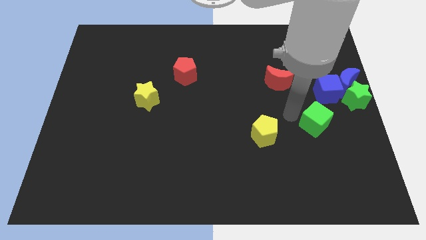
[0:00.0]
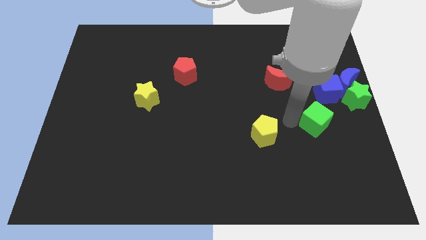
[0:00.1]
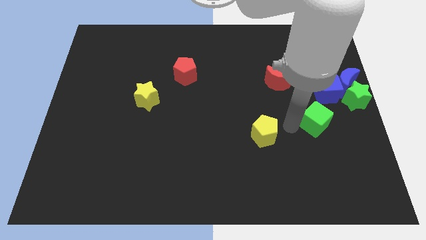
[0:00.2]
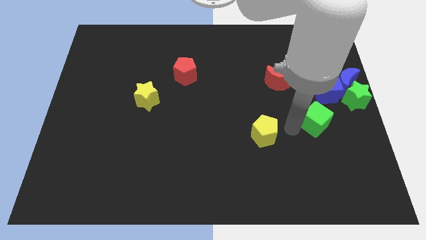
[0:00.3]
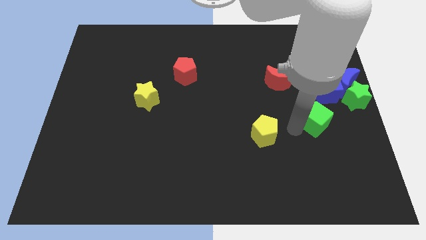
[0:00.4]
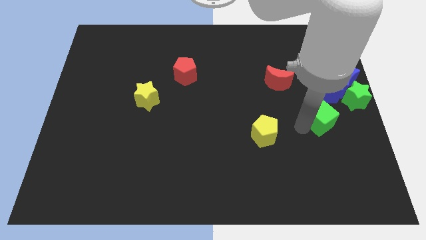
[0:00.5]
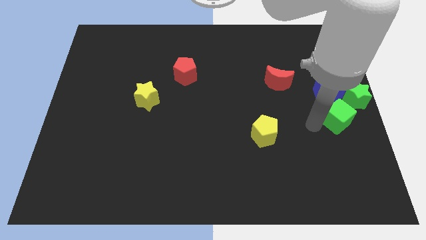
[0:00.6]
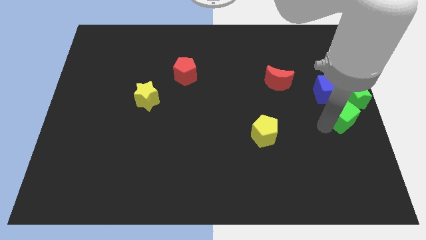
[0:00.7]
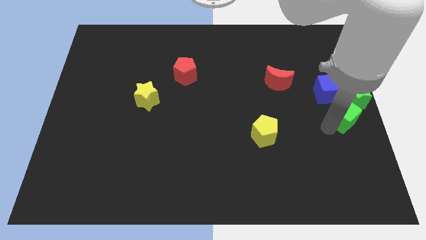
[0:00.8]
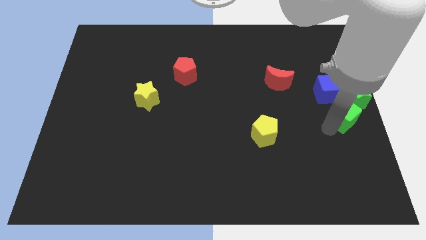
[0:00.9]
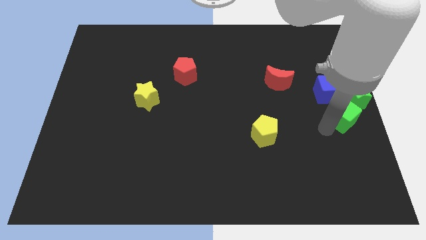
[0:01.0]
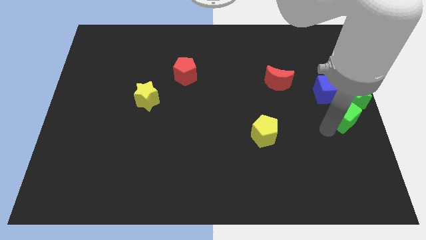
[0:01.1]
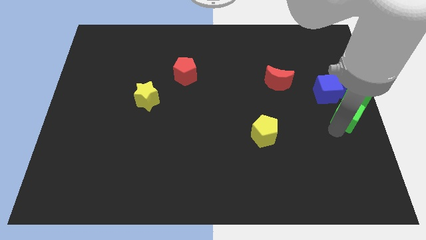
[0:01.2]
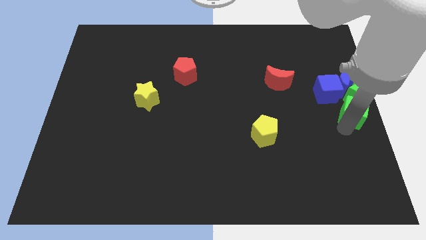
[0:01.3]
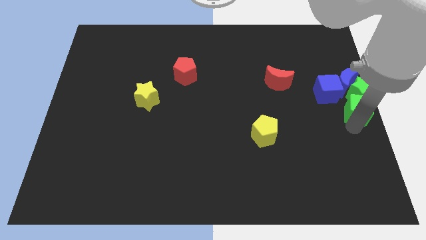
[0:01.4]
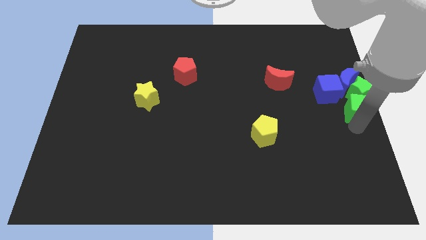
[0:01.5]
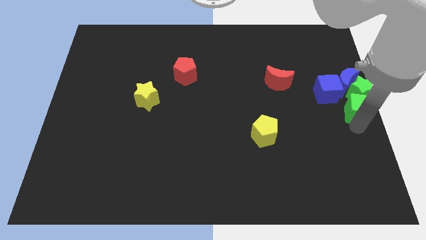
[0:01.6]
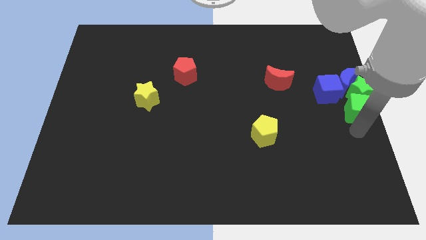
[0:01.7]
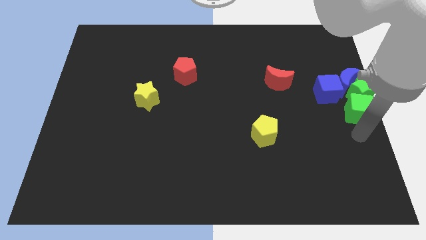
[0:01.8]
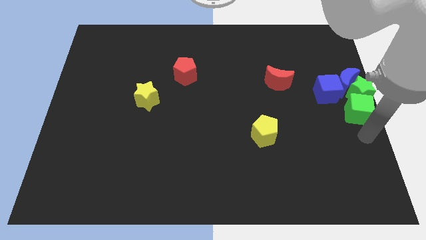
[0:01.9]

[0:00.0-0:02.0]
drag the green cube into the green star

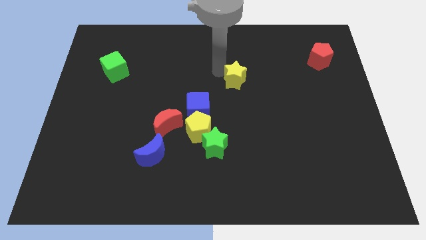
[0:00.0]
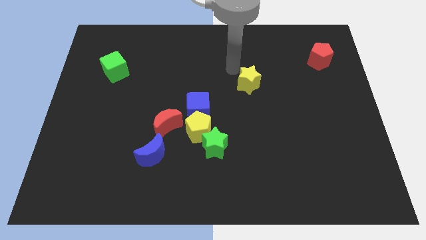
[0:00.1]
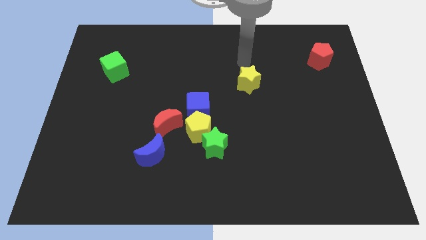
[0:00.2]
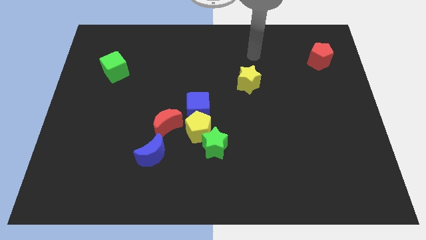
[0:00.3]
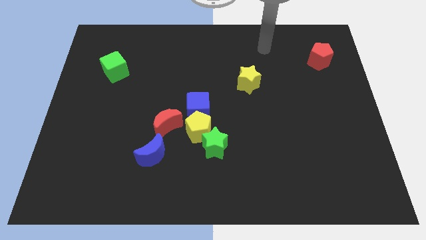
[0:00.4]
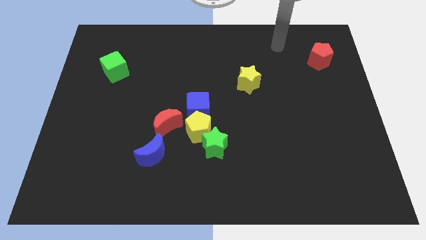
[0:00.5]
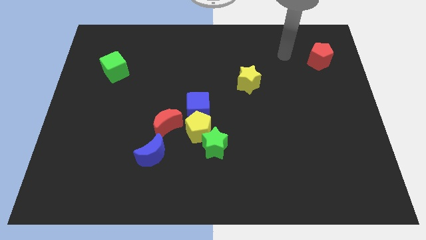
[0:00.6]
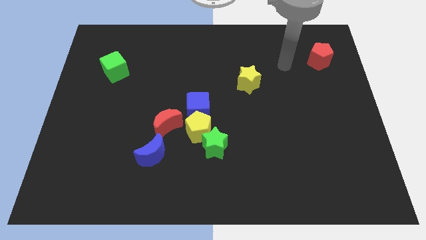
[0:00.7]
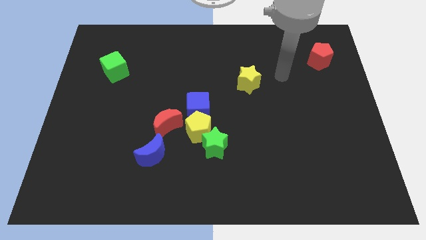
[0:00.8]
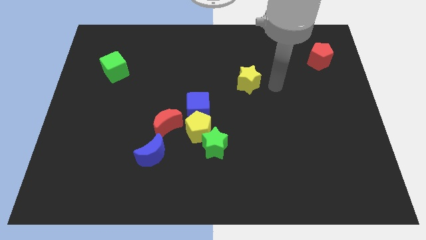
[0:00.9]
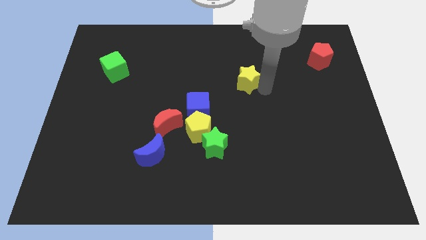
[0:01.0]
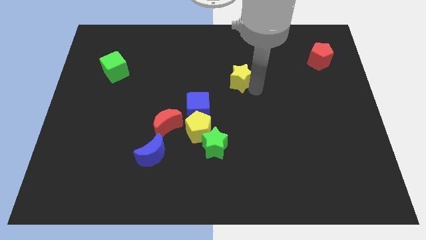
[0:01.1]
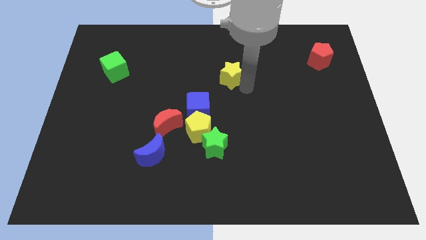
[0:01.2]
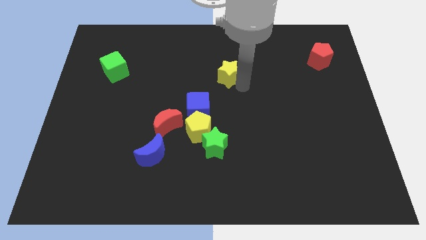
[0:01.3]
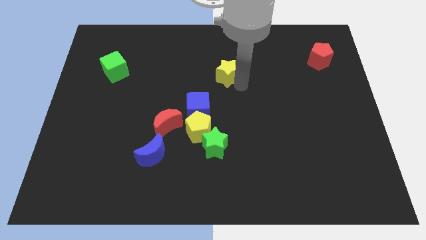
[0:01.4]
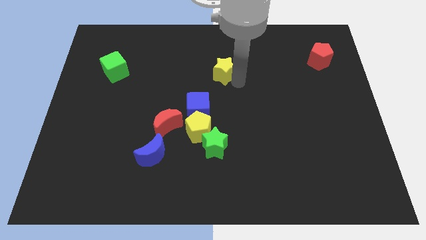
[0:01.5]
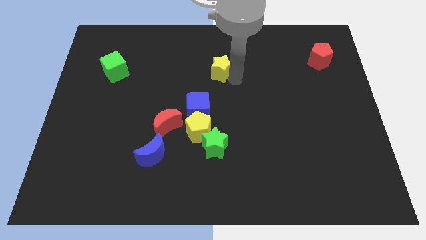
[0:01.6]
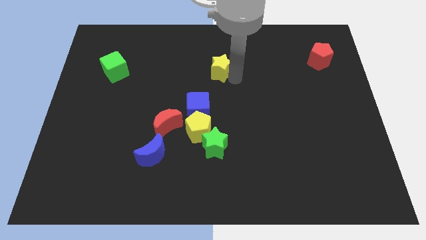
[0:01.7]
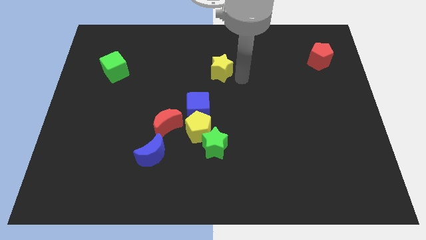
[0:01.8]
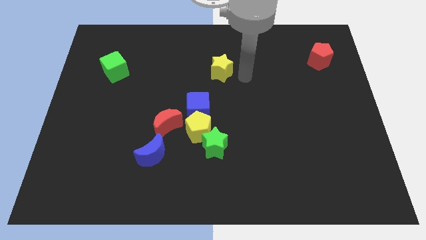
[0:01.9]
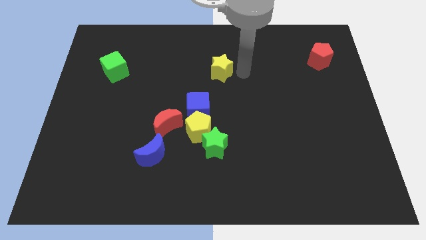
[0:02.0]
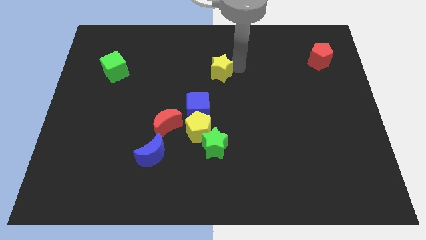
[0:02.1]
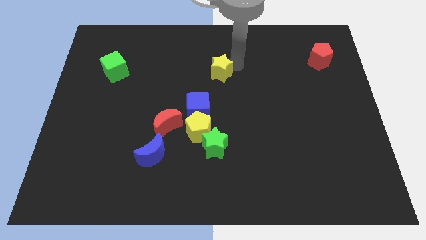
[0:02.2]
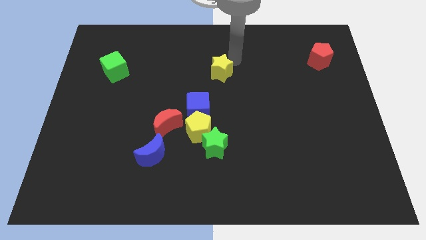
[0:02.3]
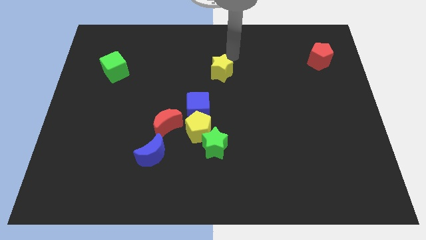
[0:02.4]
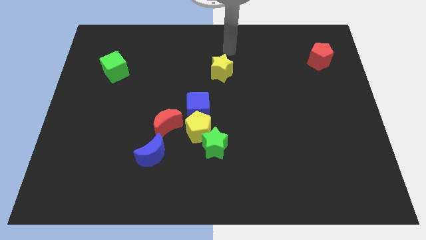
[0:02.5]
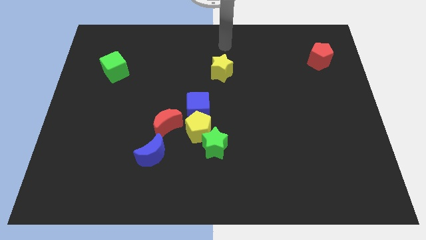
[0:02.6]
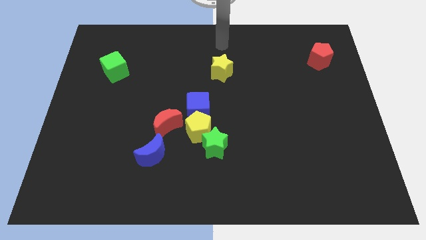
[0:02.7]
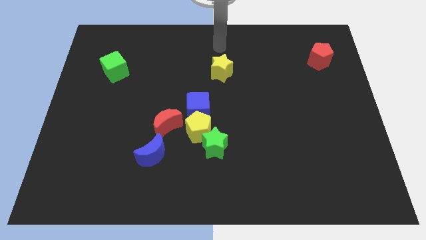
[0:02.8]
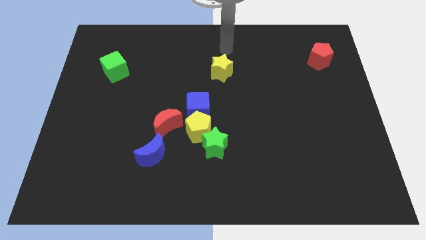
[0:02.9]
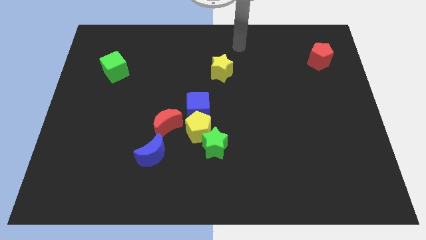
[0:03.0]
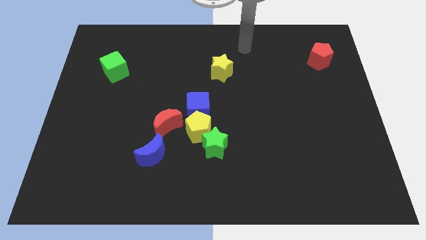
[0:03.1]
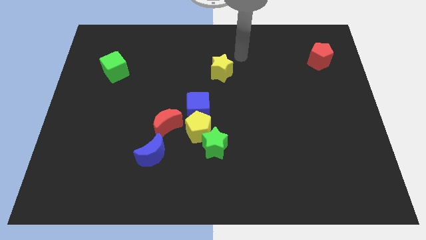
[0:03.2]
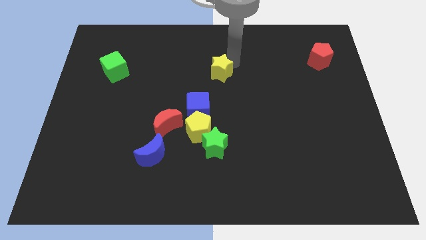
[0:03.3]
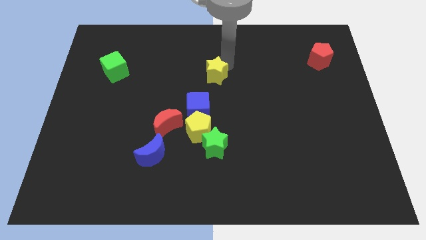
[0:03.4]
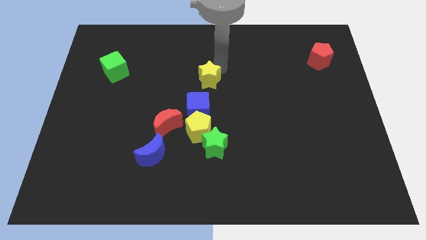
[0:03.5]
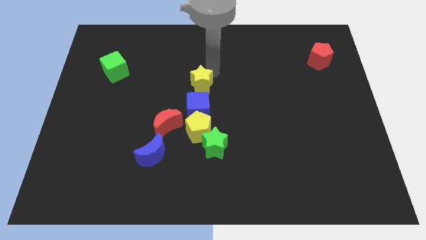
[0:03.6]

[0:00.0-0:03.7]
place the yellow star above the blue cube

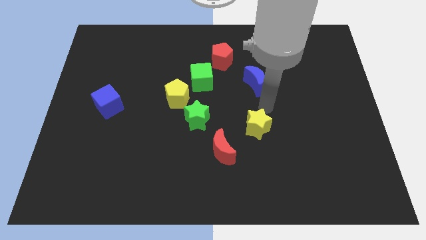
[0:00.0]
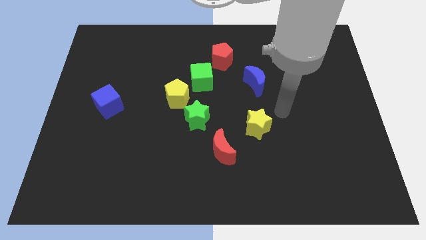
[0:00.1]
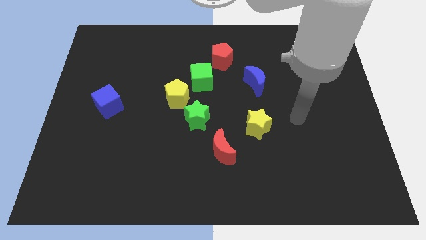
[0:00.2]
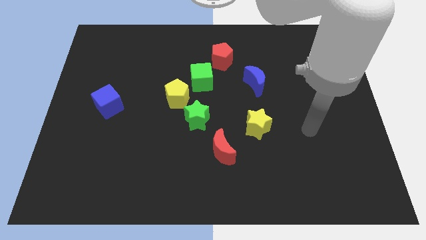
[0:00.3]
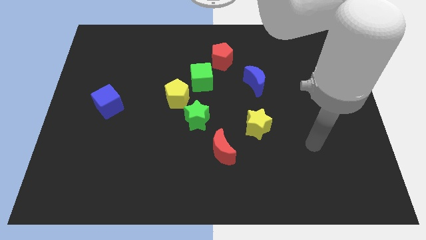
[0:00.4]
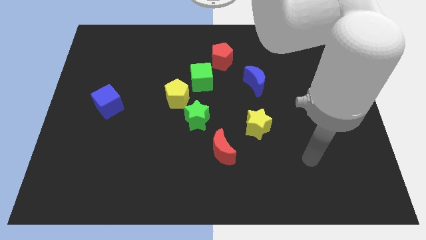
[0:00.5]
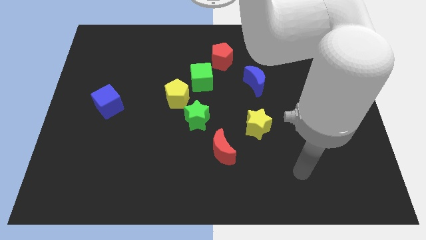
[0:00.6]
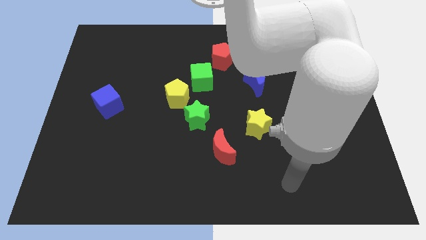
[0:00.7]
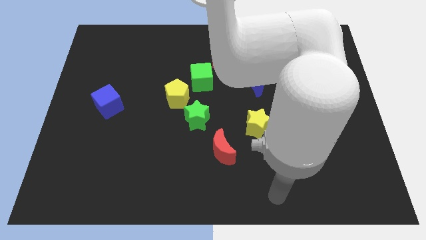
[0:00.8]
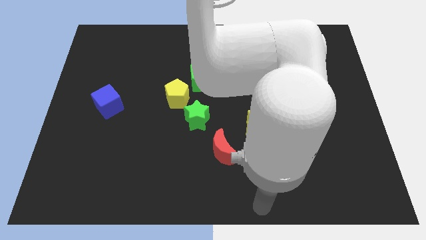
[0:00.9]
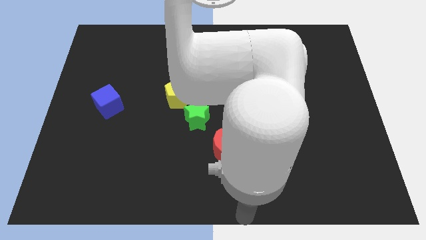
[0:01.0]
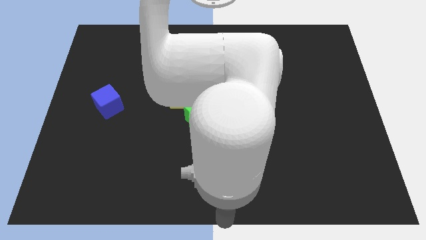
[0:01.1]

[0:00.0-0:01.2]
place the arm at the bottom center

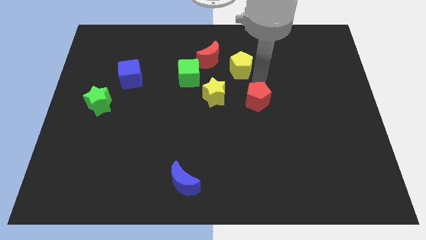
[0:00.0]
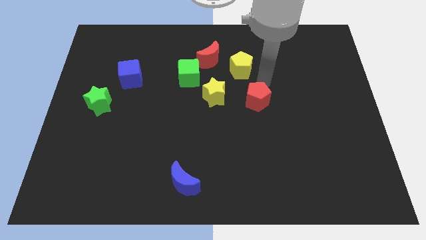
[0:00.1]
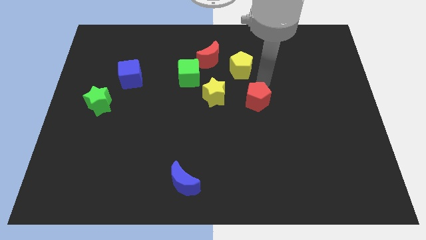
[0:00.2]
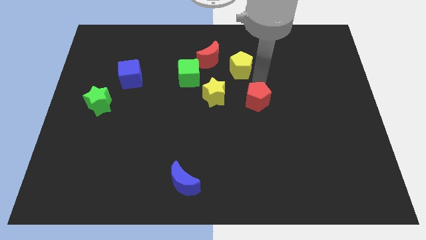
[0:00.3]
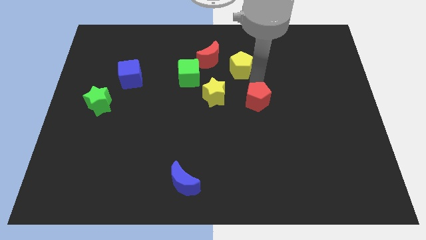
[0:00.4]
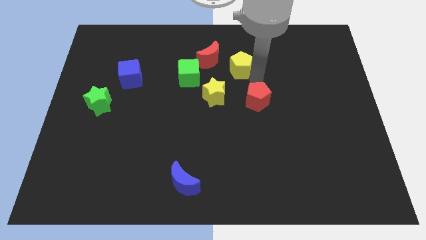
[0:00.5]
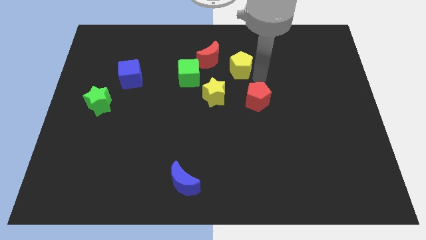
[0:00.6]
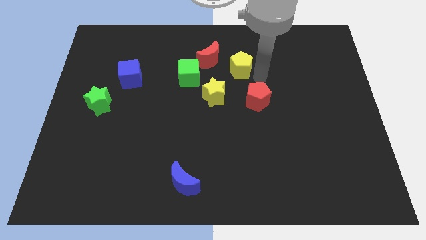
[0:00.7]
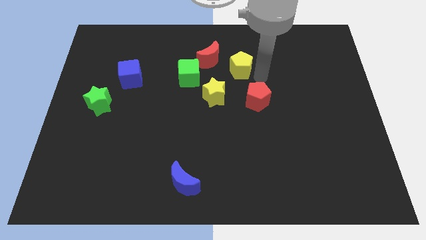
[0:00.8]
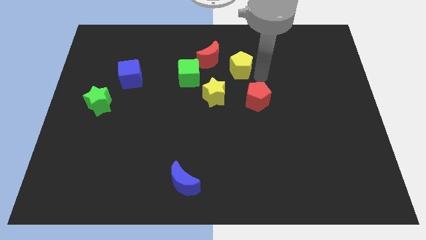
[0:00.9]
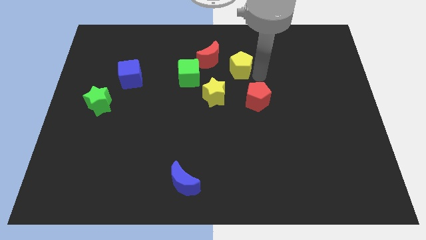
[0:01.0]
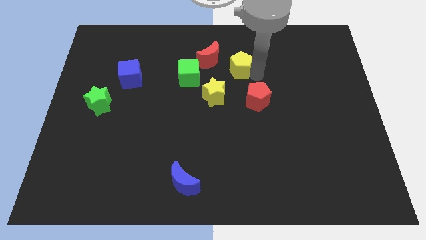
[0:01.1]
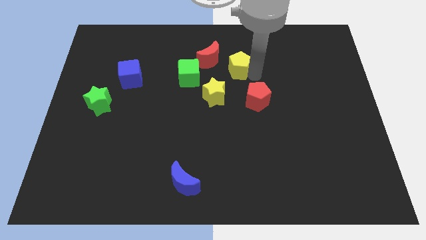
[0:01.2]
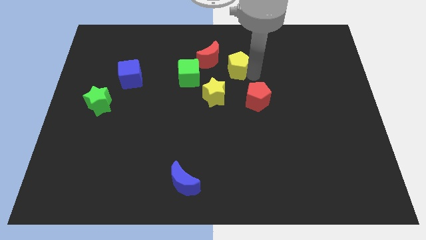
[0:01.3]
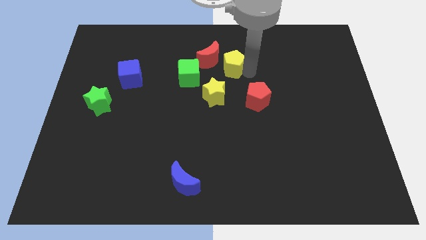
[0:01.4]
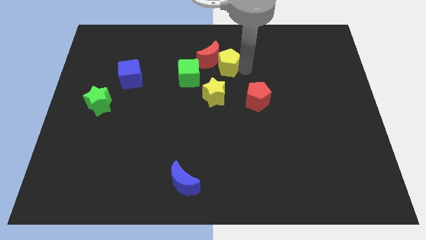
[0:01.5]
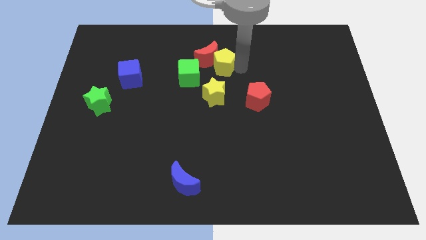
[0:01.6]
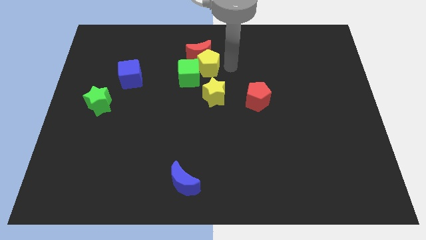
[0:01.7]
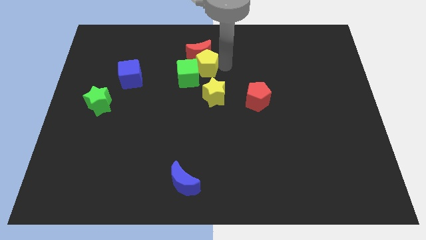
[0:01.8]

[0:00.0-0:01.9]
move the yellow pentagon to the top right of the green cube

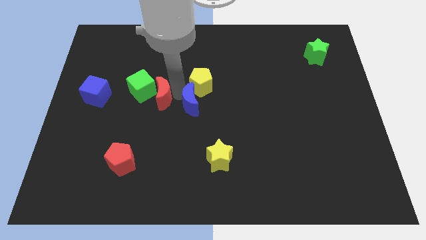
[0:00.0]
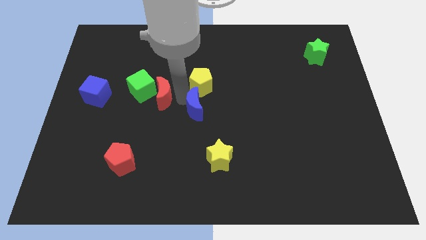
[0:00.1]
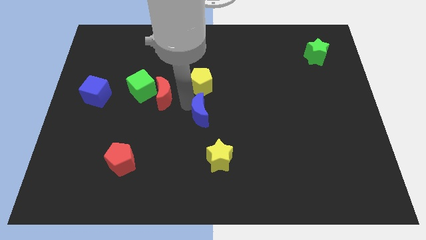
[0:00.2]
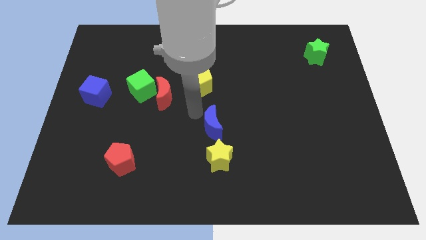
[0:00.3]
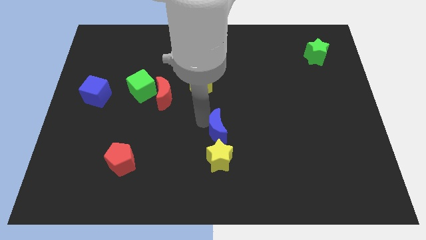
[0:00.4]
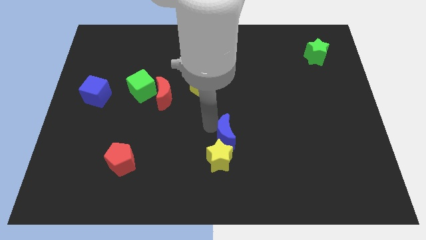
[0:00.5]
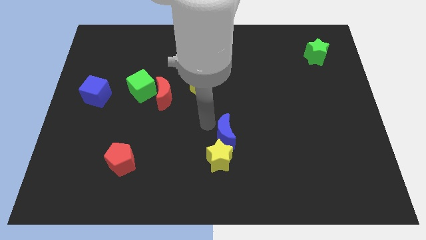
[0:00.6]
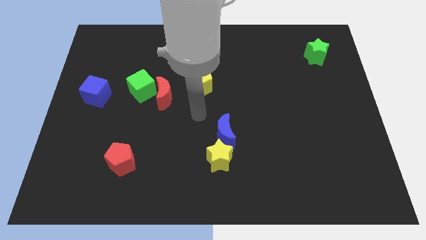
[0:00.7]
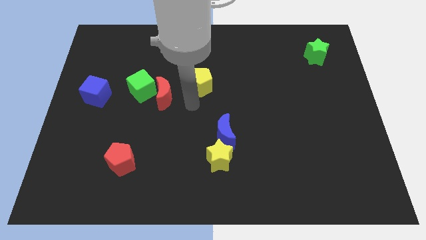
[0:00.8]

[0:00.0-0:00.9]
move the blue crescent on the top of the yellow star on the board
